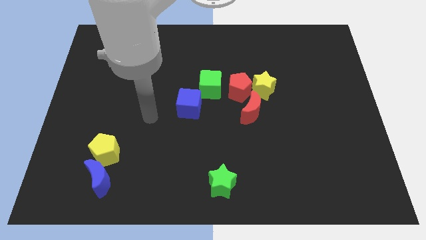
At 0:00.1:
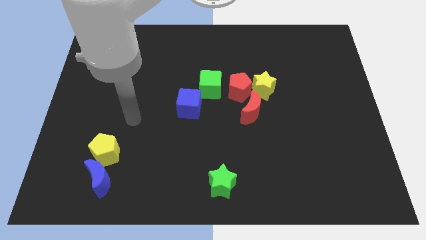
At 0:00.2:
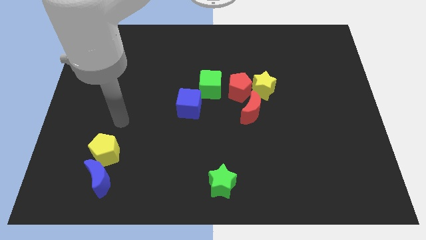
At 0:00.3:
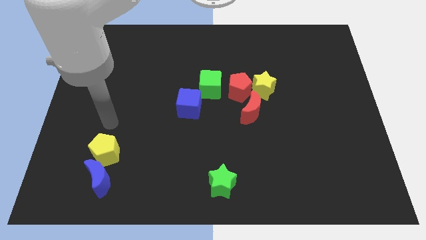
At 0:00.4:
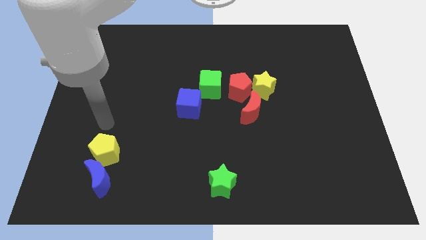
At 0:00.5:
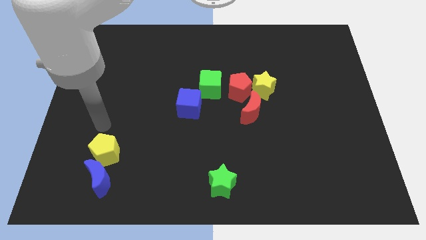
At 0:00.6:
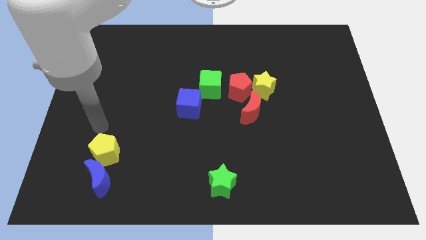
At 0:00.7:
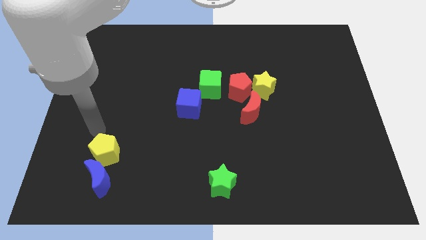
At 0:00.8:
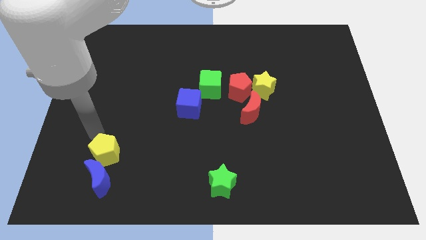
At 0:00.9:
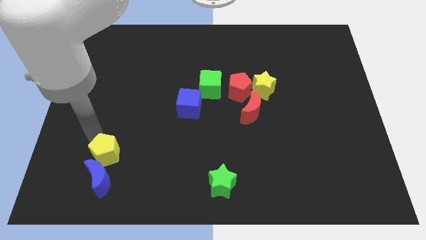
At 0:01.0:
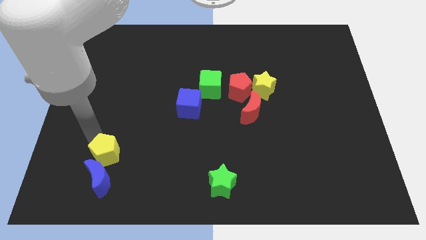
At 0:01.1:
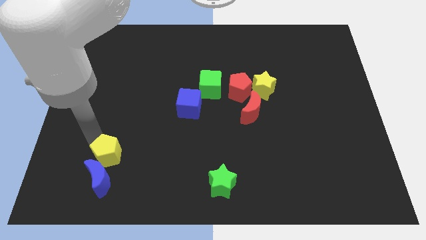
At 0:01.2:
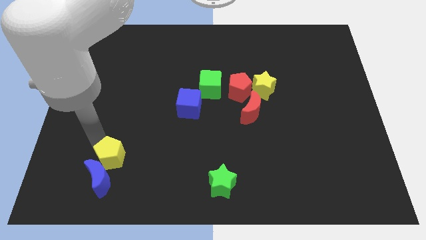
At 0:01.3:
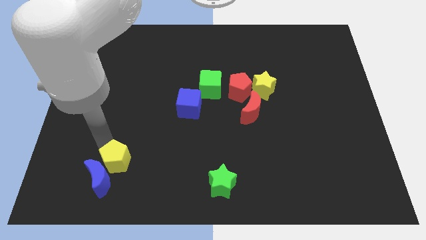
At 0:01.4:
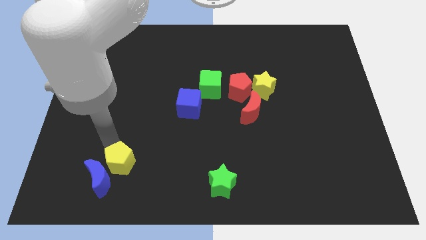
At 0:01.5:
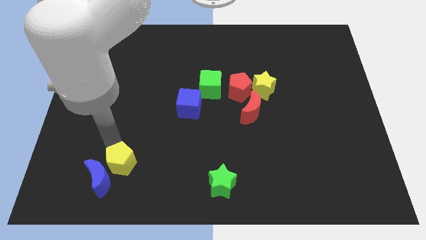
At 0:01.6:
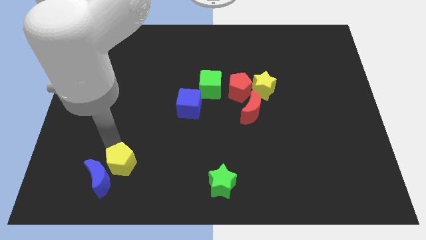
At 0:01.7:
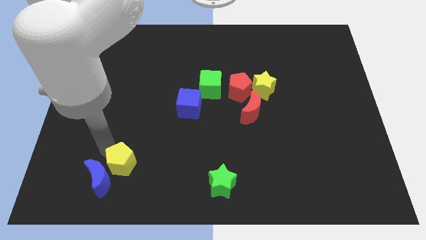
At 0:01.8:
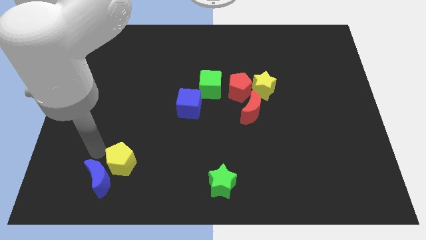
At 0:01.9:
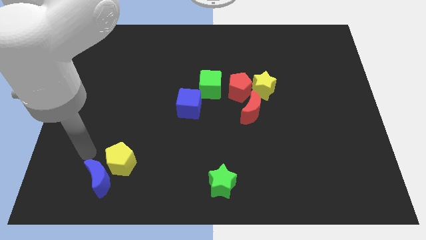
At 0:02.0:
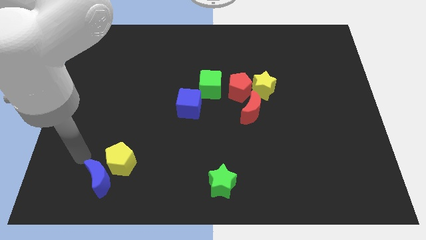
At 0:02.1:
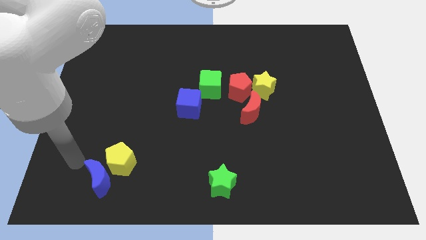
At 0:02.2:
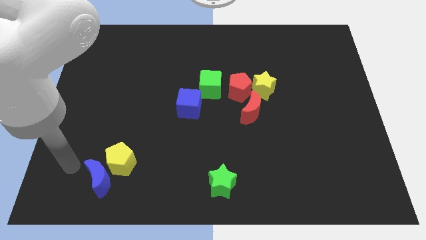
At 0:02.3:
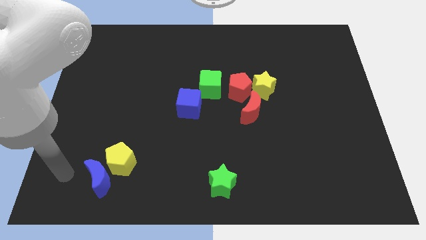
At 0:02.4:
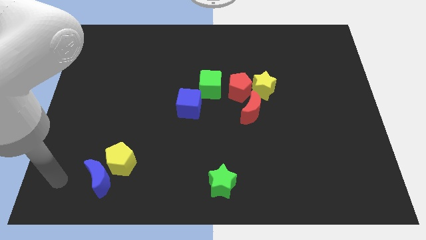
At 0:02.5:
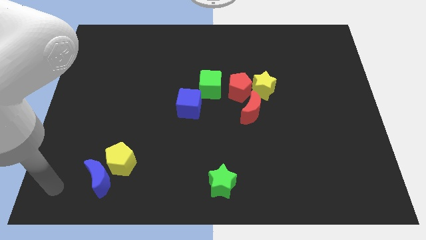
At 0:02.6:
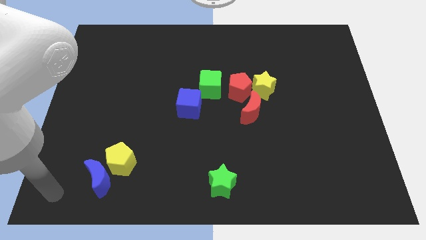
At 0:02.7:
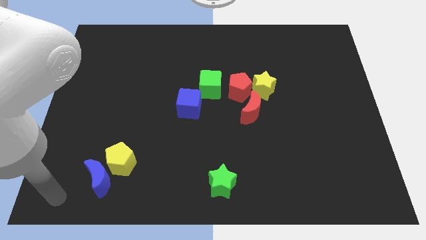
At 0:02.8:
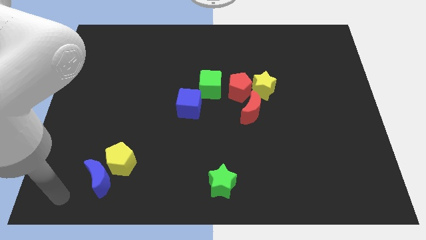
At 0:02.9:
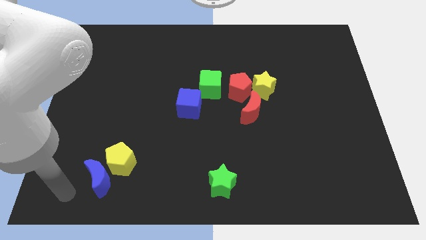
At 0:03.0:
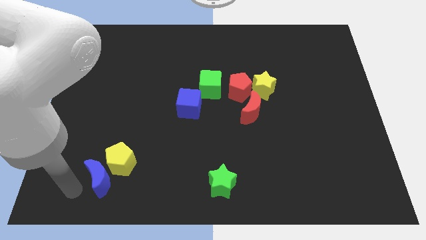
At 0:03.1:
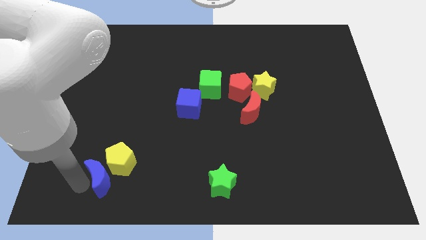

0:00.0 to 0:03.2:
move the yellow pentagon to the right of the blue crescent

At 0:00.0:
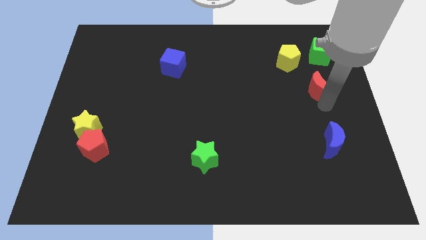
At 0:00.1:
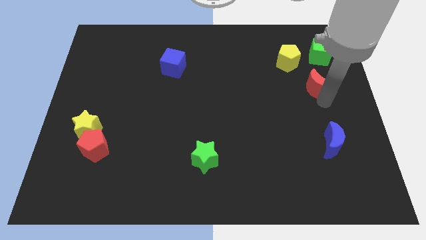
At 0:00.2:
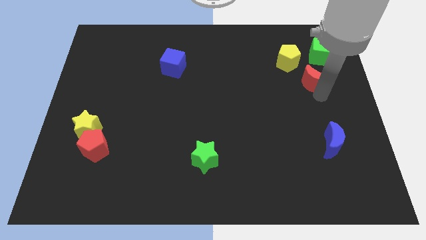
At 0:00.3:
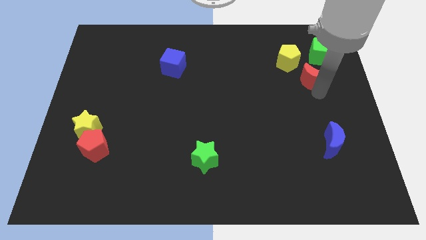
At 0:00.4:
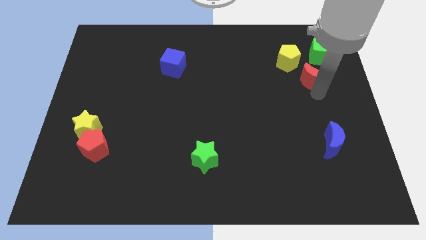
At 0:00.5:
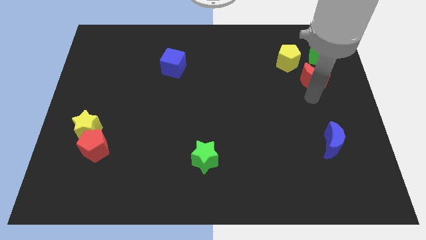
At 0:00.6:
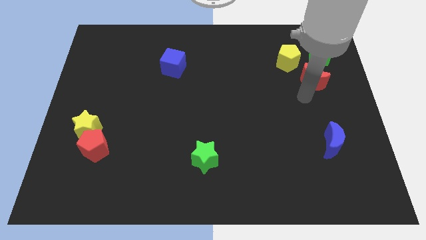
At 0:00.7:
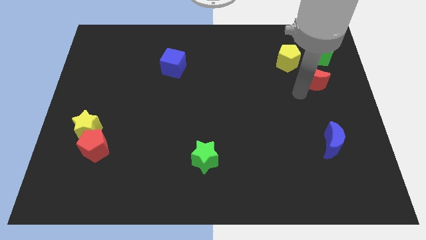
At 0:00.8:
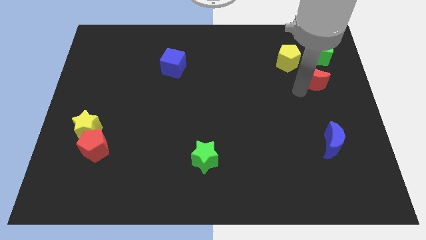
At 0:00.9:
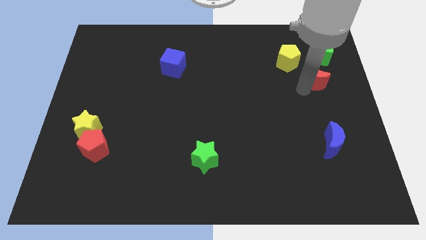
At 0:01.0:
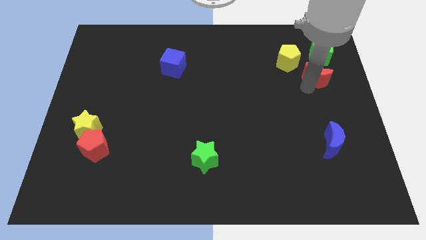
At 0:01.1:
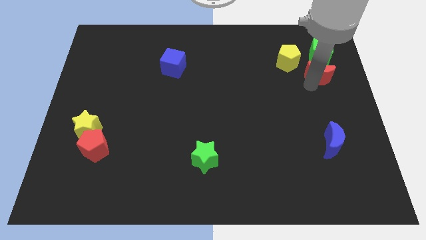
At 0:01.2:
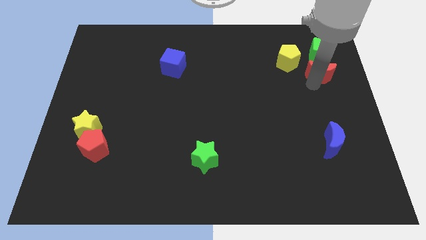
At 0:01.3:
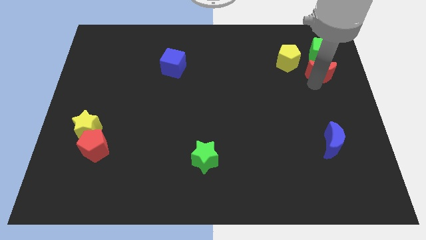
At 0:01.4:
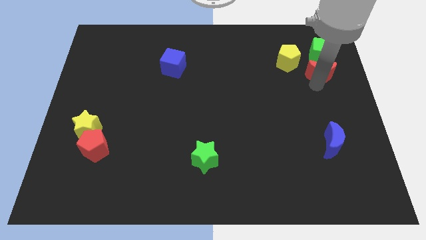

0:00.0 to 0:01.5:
move the red crescent into the green cube

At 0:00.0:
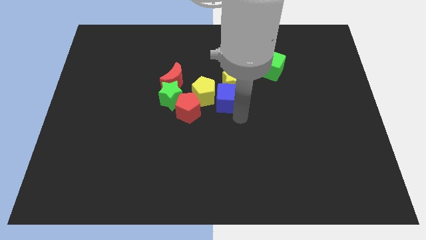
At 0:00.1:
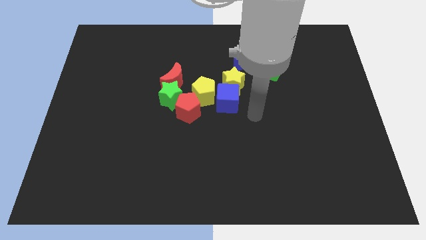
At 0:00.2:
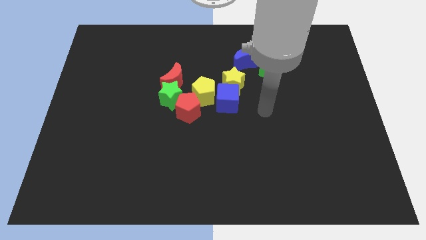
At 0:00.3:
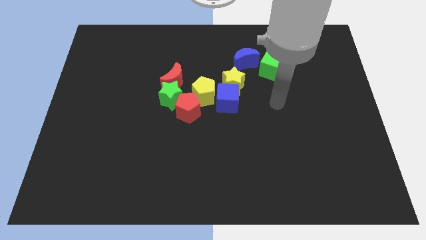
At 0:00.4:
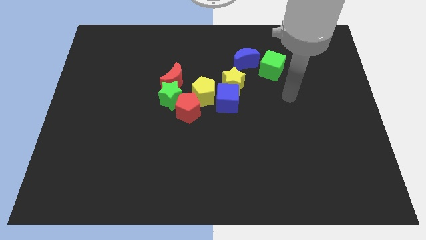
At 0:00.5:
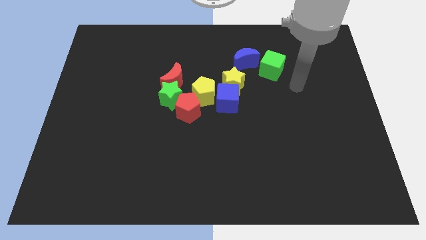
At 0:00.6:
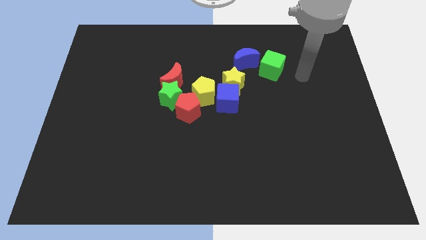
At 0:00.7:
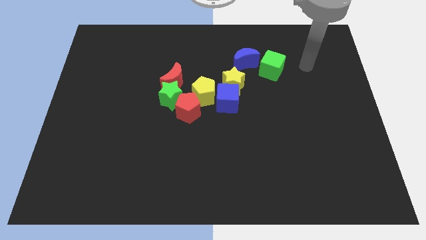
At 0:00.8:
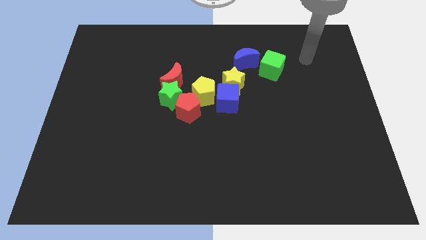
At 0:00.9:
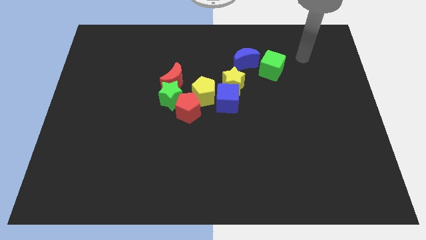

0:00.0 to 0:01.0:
go away from the blue cube

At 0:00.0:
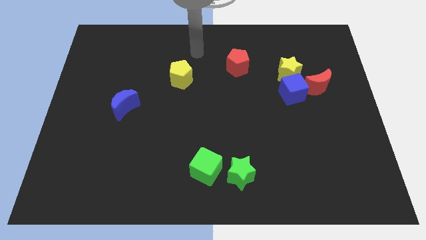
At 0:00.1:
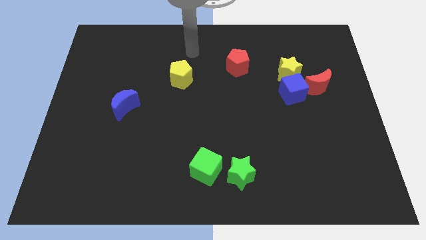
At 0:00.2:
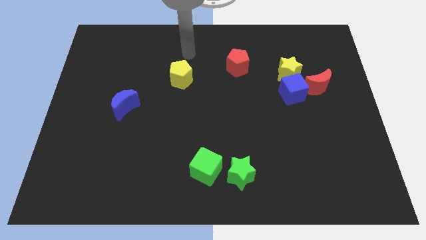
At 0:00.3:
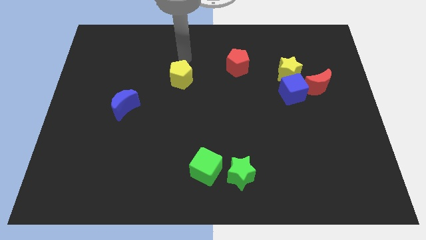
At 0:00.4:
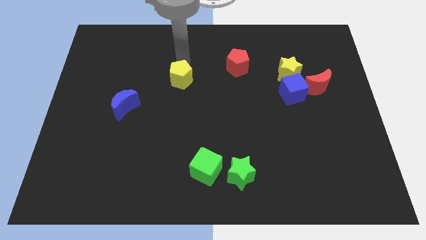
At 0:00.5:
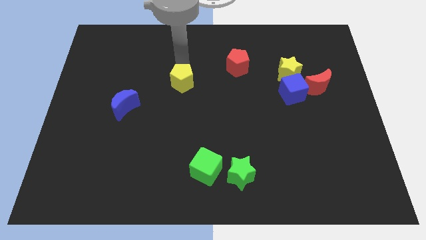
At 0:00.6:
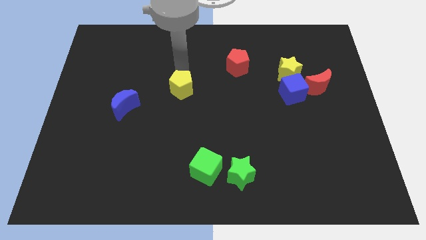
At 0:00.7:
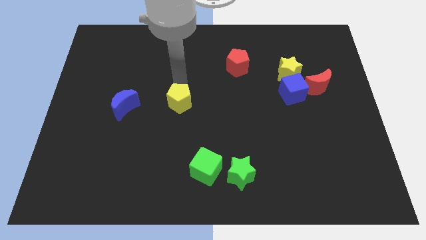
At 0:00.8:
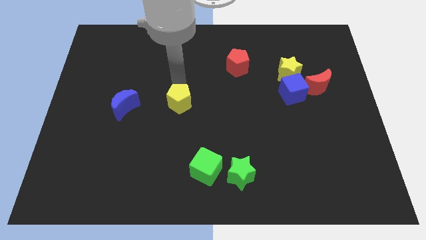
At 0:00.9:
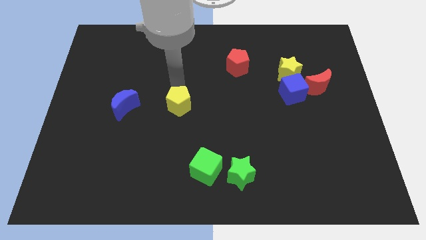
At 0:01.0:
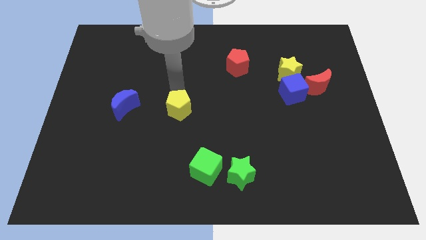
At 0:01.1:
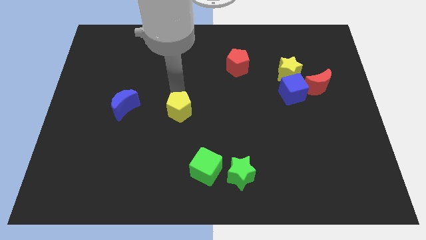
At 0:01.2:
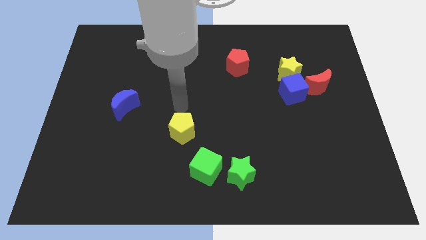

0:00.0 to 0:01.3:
move the yellow pentagon downwards

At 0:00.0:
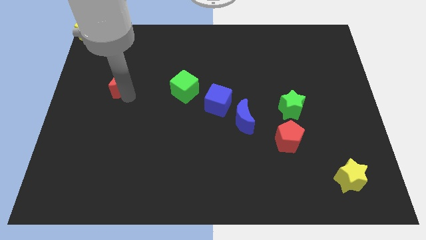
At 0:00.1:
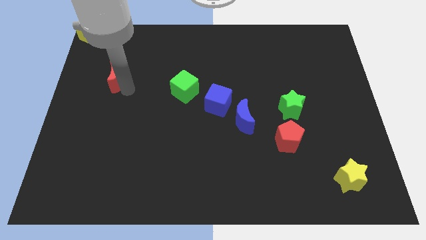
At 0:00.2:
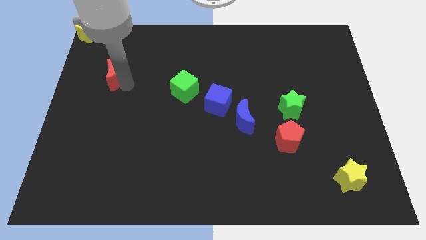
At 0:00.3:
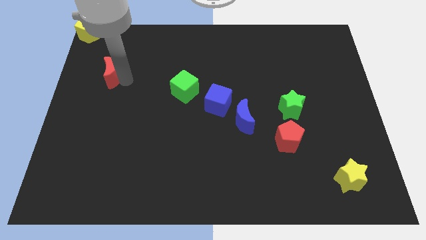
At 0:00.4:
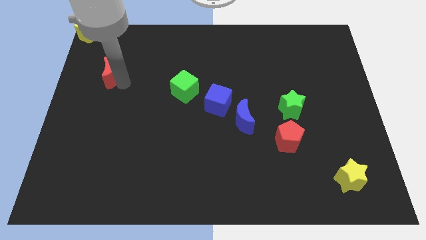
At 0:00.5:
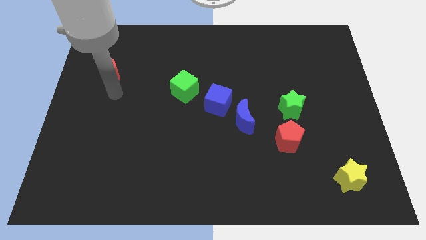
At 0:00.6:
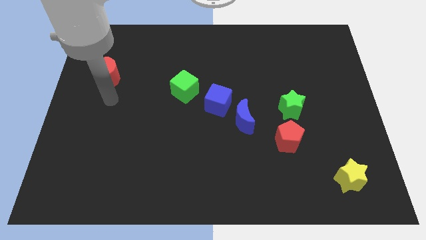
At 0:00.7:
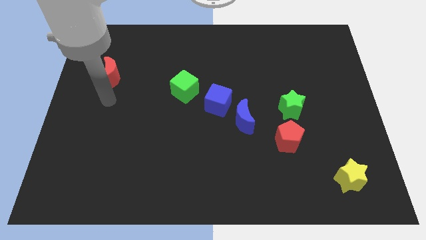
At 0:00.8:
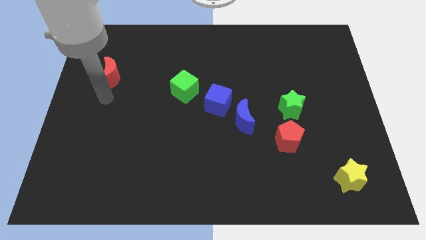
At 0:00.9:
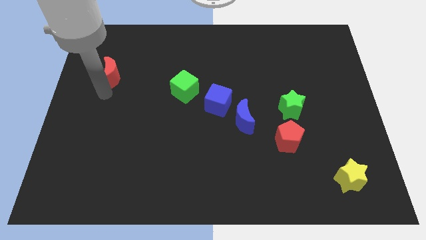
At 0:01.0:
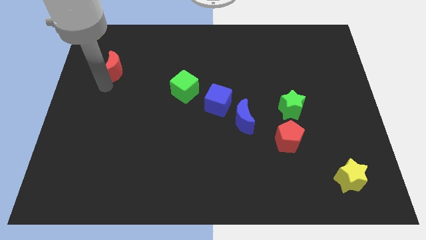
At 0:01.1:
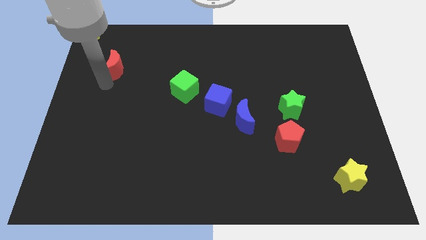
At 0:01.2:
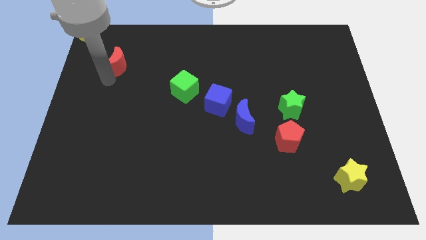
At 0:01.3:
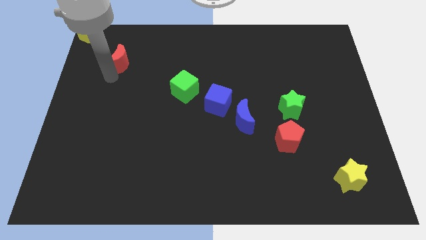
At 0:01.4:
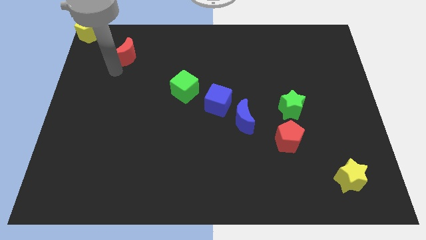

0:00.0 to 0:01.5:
place the red moon in between the green cube and the yellow star diagonally

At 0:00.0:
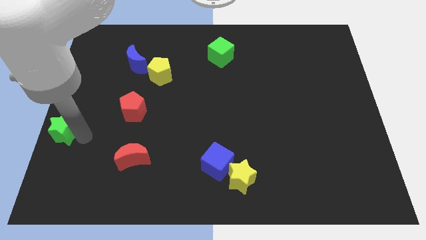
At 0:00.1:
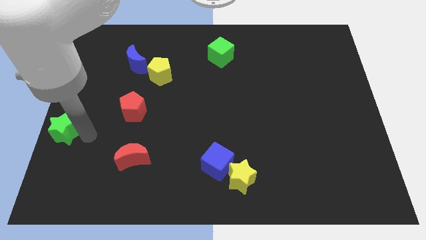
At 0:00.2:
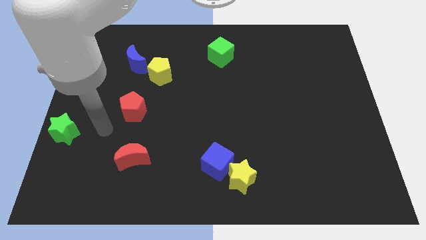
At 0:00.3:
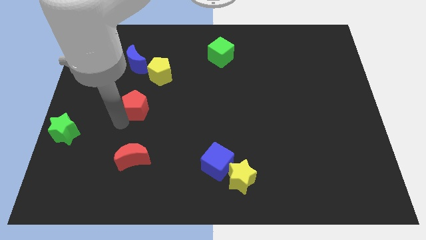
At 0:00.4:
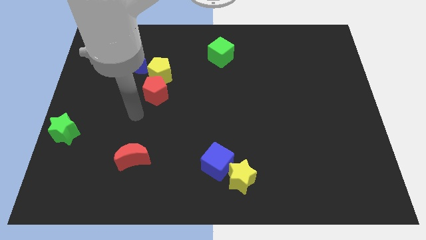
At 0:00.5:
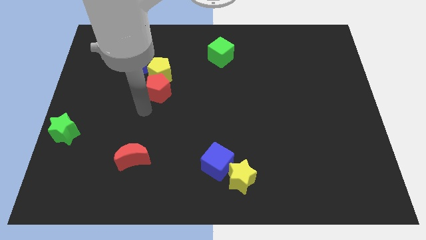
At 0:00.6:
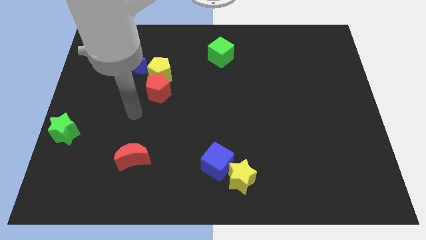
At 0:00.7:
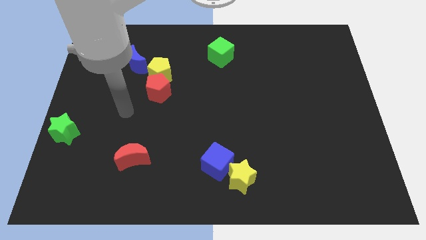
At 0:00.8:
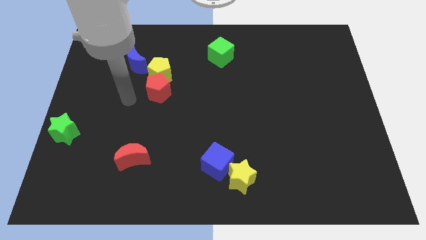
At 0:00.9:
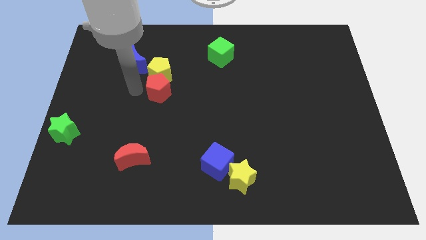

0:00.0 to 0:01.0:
push red pentagon into yellow pentagon
